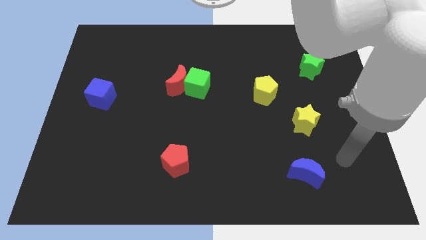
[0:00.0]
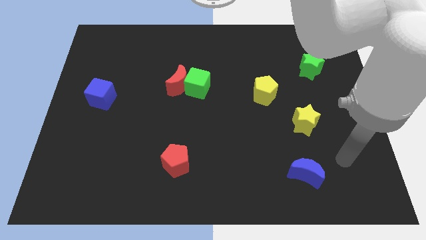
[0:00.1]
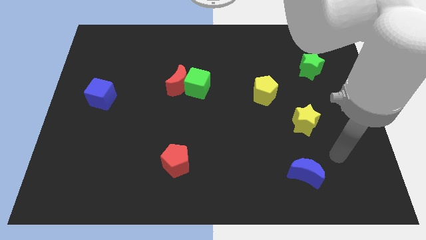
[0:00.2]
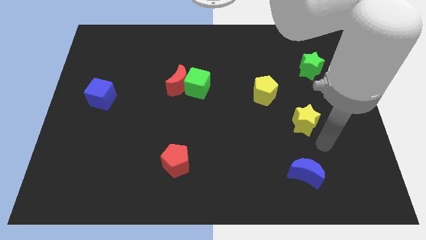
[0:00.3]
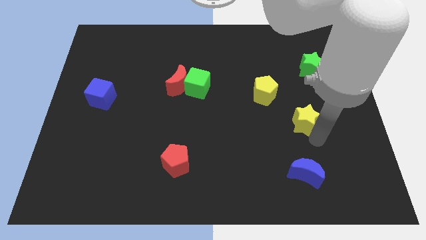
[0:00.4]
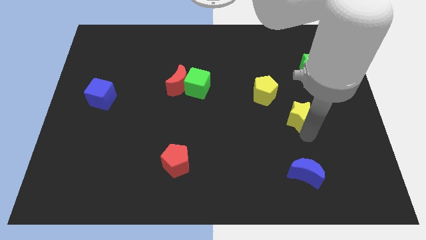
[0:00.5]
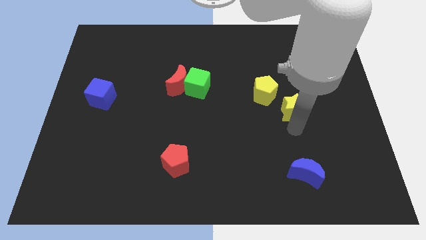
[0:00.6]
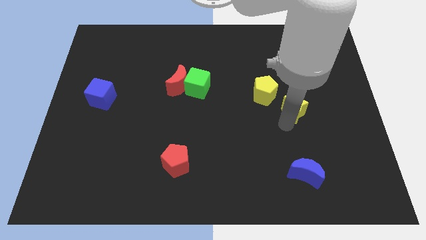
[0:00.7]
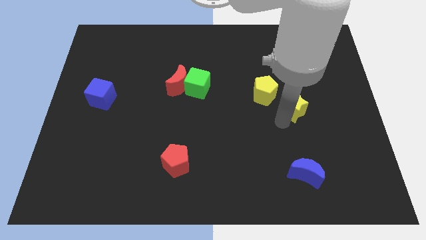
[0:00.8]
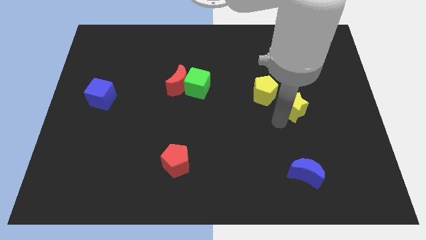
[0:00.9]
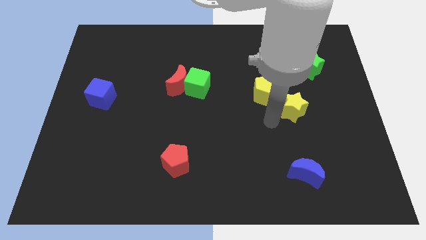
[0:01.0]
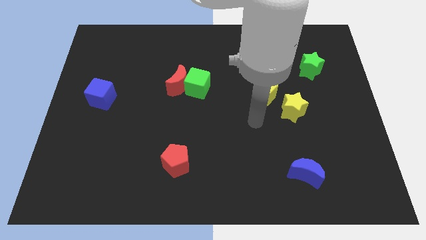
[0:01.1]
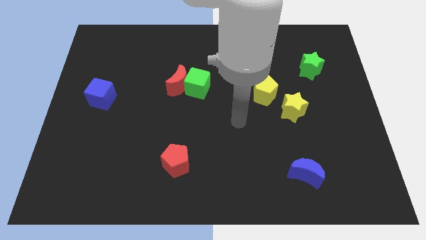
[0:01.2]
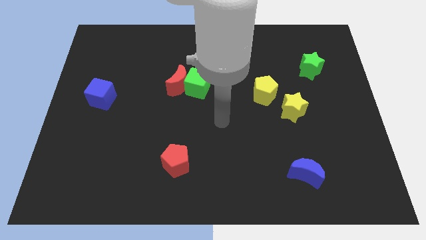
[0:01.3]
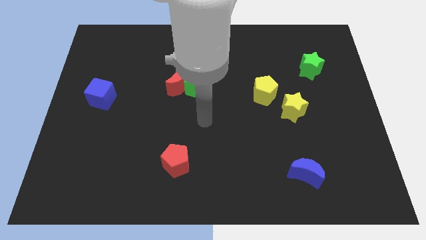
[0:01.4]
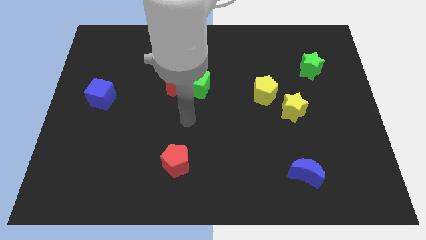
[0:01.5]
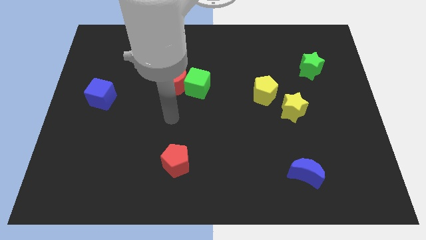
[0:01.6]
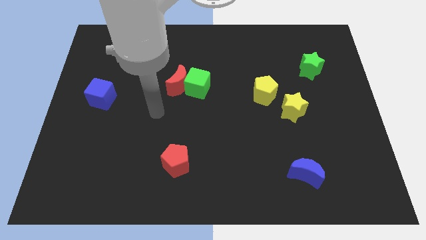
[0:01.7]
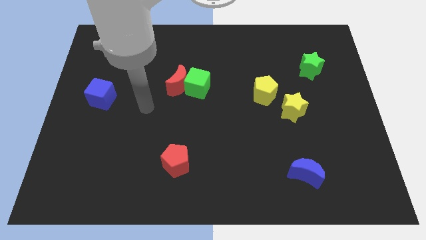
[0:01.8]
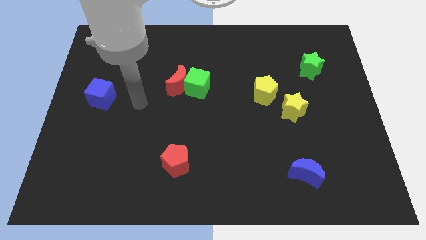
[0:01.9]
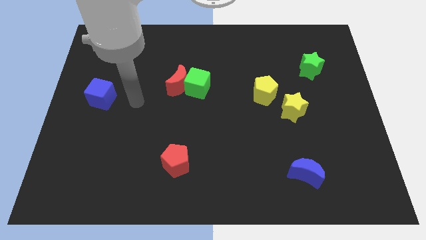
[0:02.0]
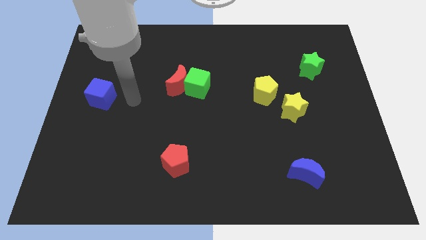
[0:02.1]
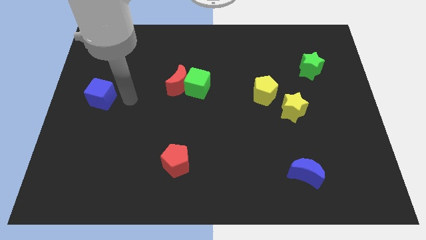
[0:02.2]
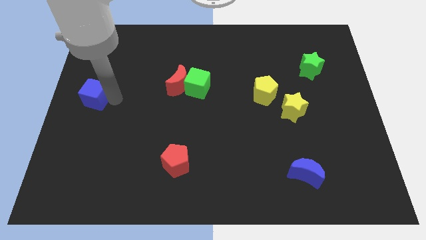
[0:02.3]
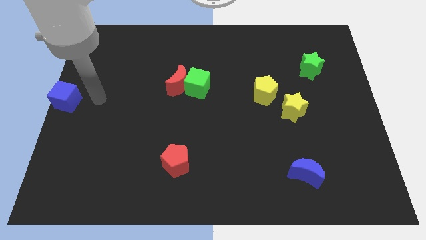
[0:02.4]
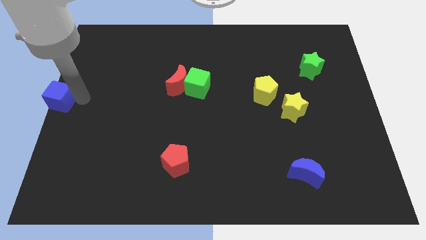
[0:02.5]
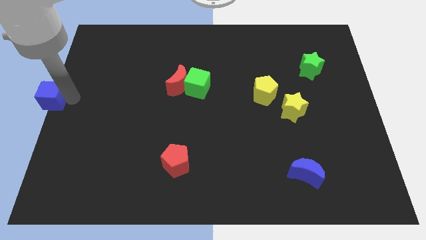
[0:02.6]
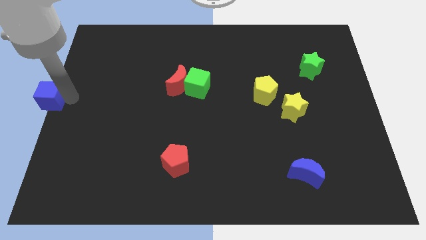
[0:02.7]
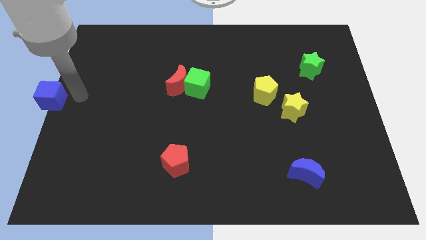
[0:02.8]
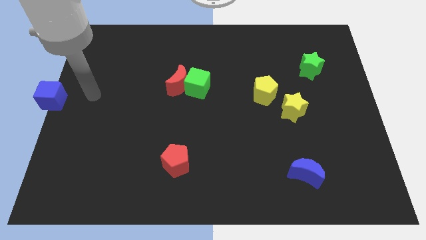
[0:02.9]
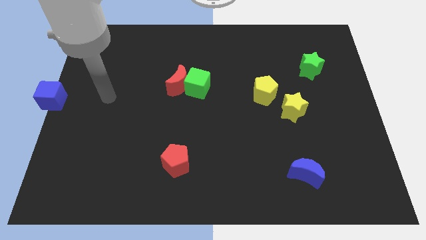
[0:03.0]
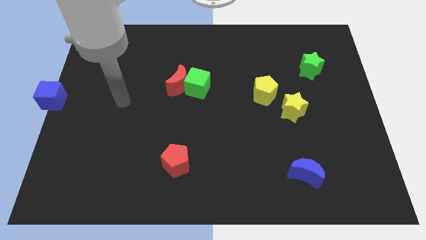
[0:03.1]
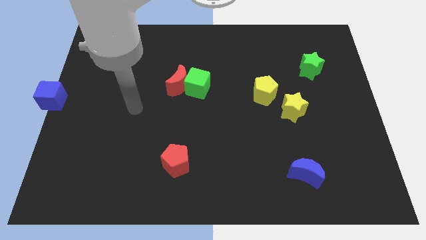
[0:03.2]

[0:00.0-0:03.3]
move the blue cube to the center left side

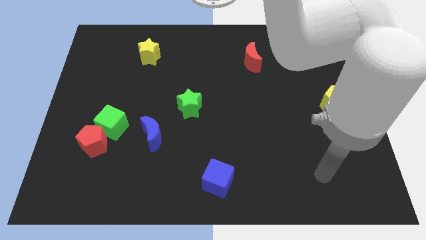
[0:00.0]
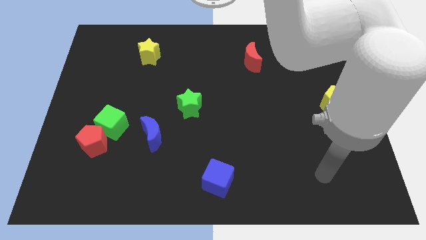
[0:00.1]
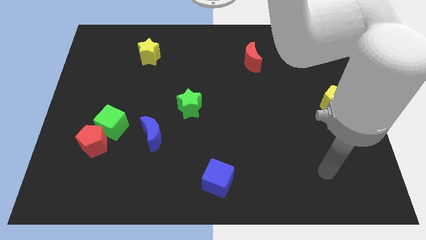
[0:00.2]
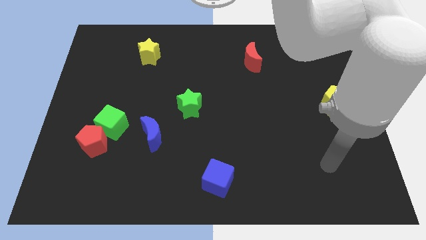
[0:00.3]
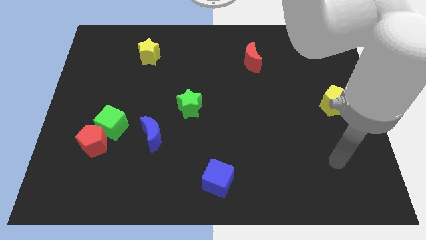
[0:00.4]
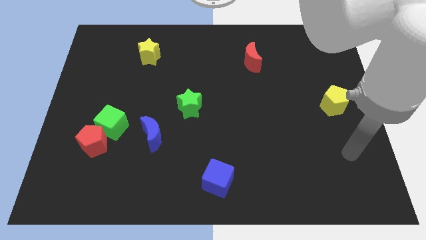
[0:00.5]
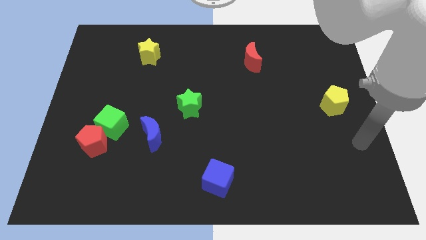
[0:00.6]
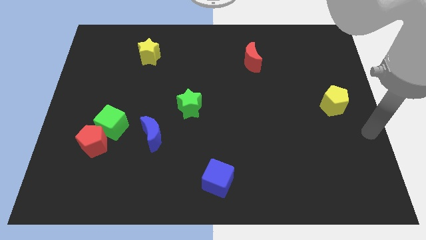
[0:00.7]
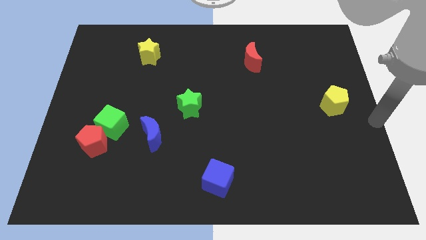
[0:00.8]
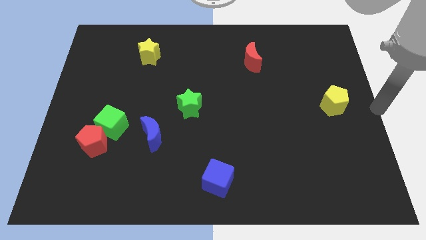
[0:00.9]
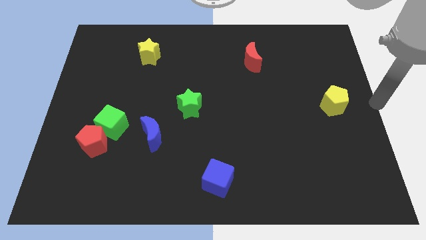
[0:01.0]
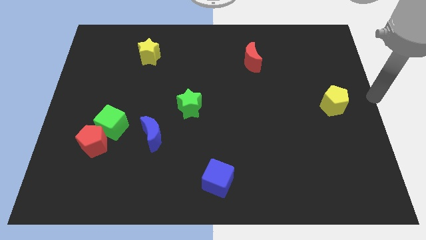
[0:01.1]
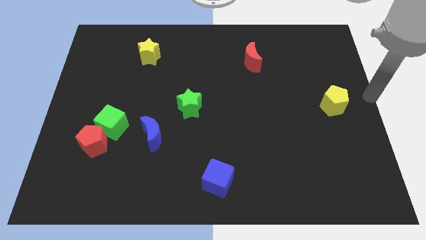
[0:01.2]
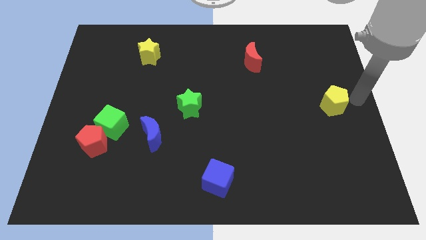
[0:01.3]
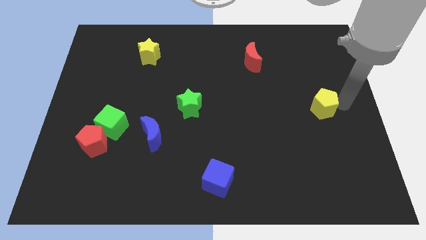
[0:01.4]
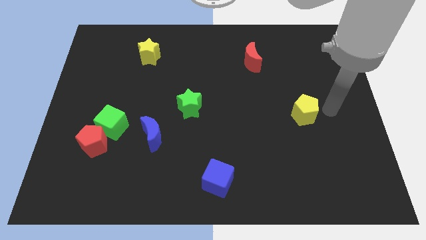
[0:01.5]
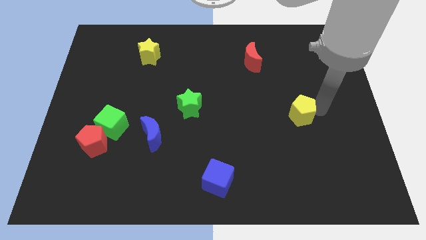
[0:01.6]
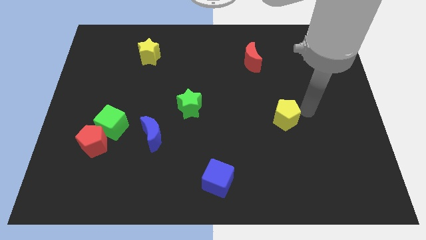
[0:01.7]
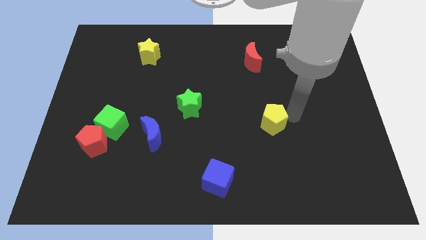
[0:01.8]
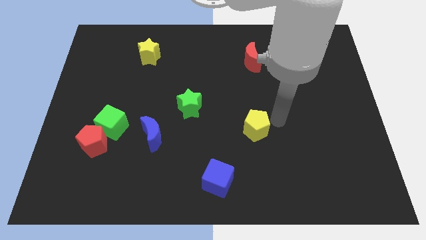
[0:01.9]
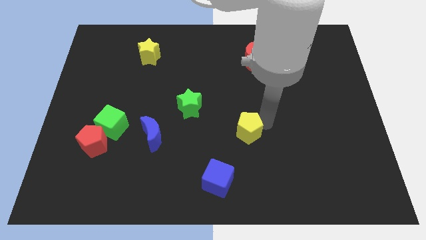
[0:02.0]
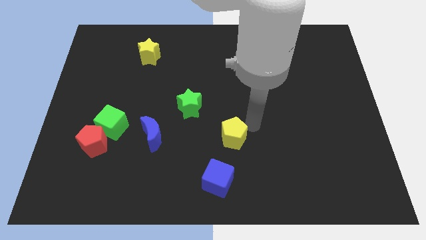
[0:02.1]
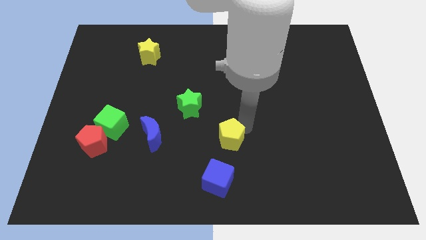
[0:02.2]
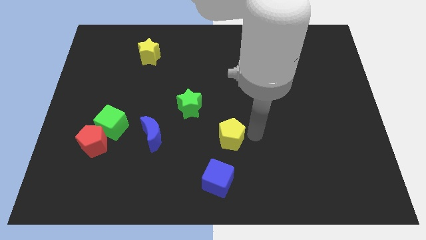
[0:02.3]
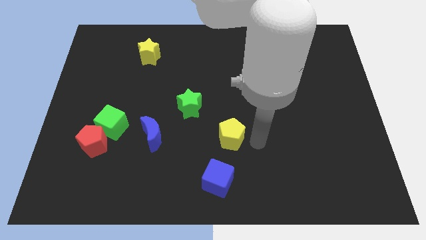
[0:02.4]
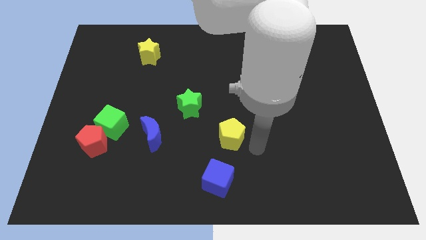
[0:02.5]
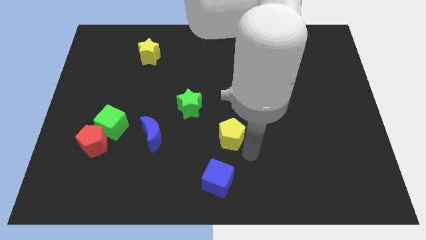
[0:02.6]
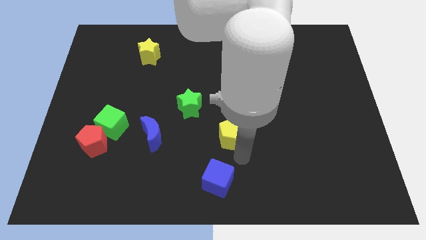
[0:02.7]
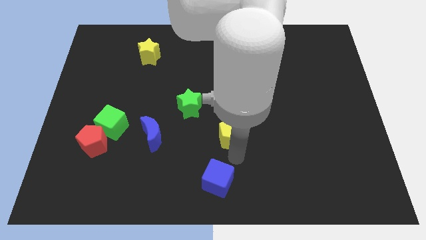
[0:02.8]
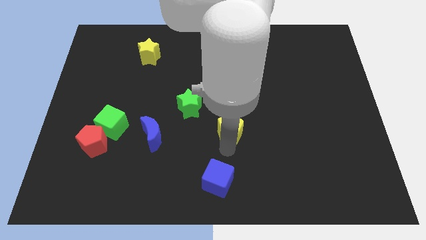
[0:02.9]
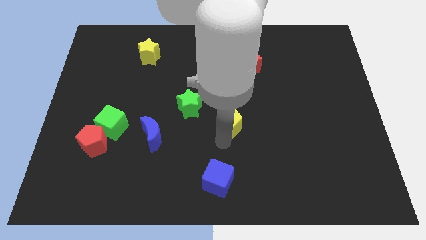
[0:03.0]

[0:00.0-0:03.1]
move the yellow pentagon the top side of the blue cube

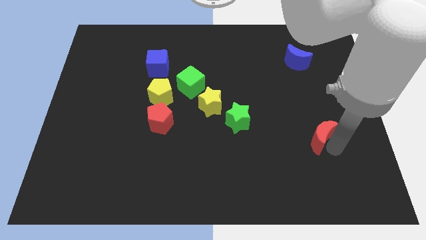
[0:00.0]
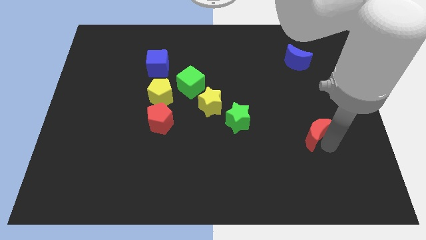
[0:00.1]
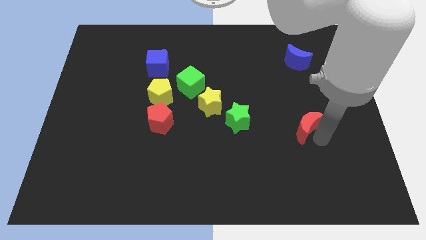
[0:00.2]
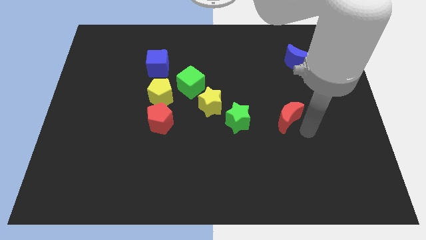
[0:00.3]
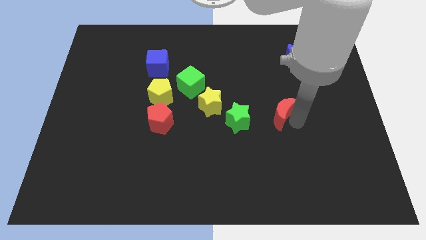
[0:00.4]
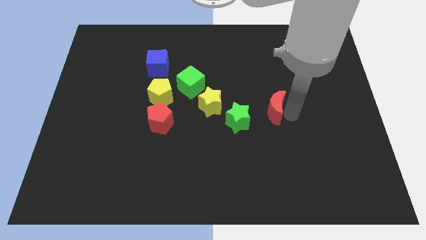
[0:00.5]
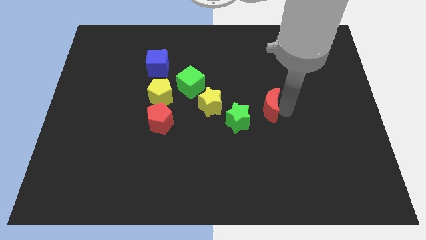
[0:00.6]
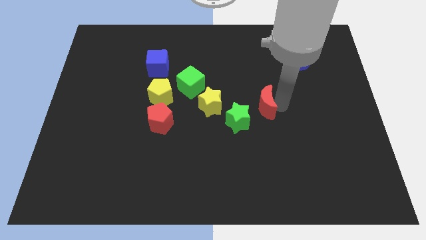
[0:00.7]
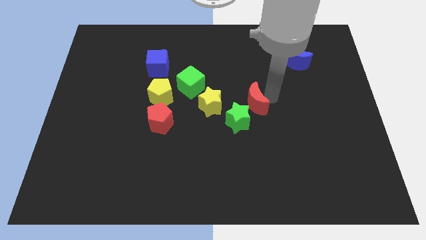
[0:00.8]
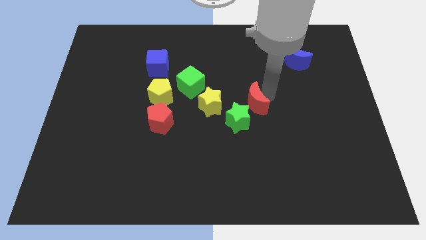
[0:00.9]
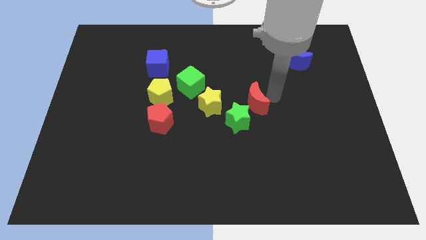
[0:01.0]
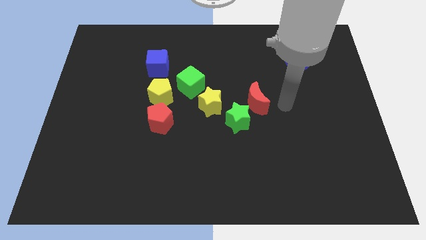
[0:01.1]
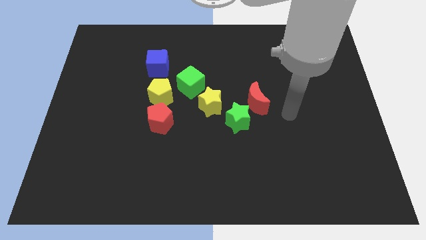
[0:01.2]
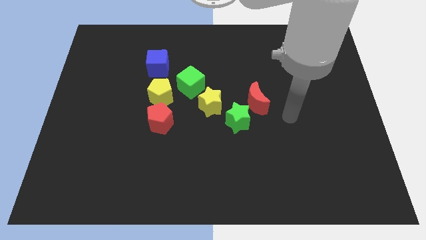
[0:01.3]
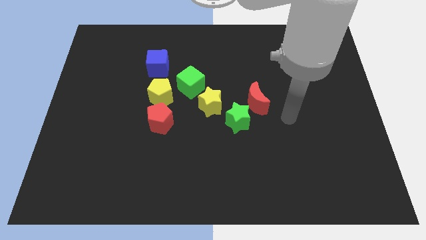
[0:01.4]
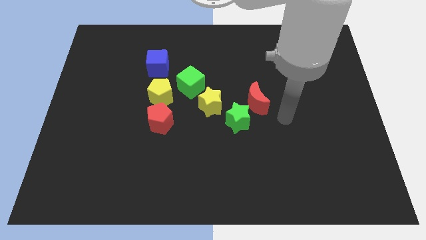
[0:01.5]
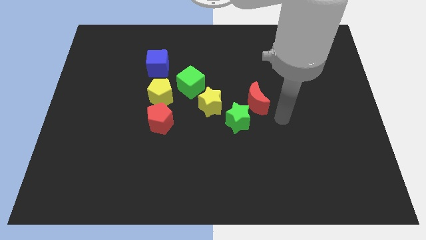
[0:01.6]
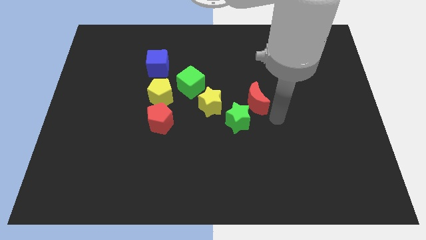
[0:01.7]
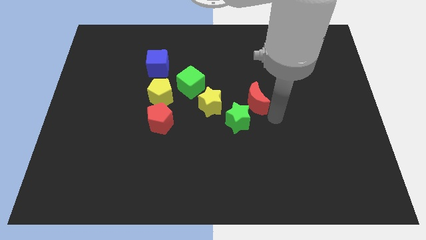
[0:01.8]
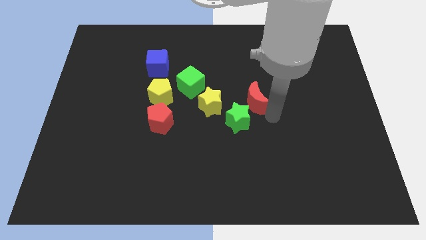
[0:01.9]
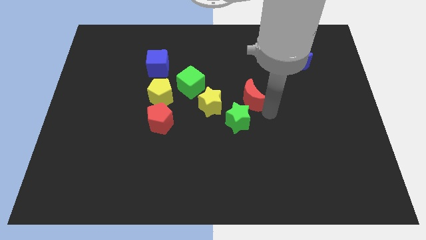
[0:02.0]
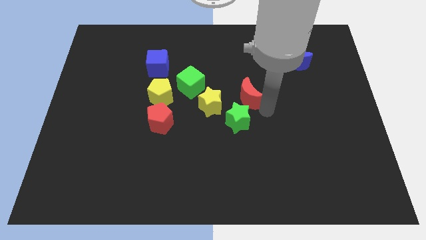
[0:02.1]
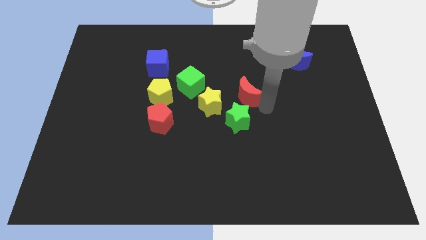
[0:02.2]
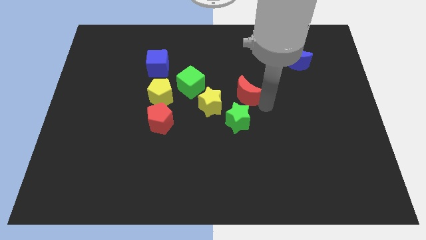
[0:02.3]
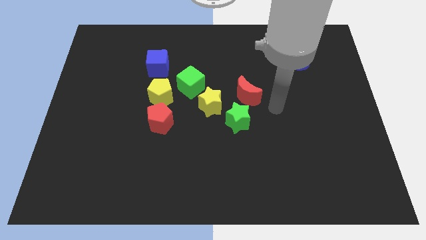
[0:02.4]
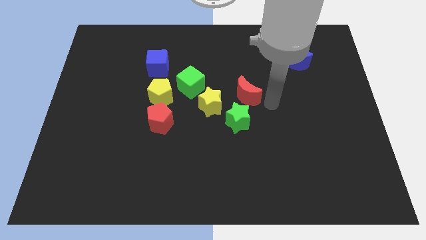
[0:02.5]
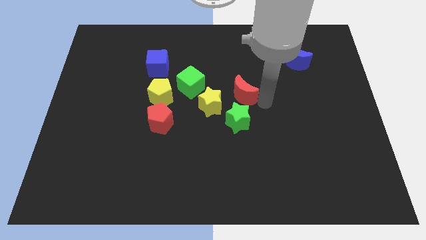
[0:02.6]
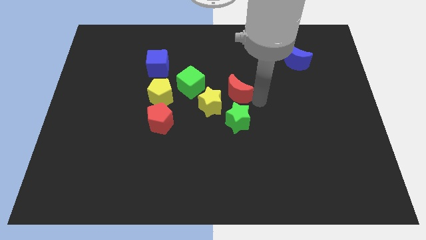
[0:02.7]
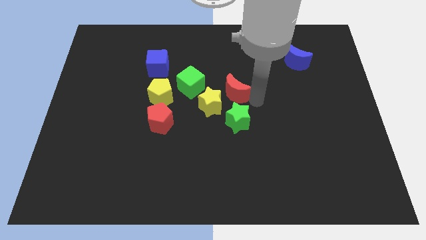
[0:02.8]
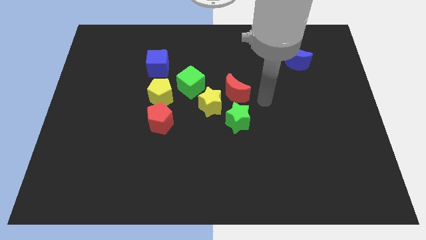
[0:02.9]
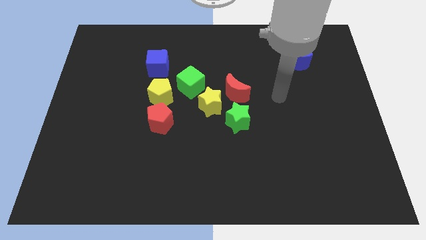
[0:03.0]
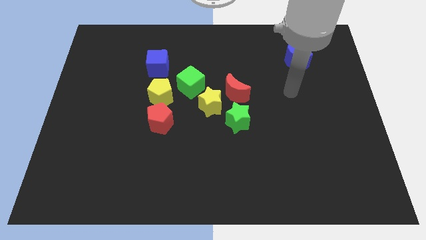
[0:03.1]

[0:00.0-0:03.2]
place the red crescent right to the yellow star
